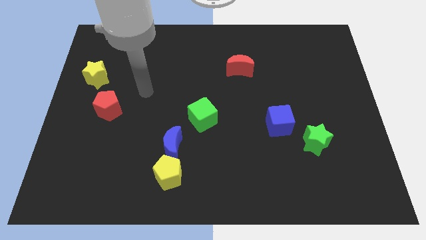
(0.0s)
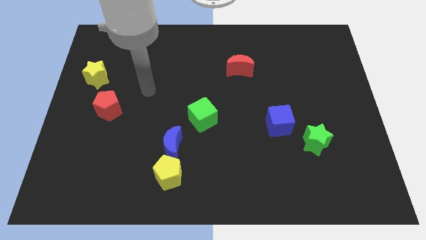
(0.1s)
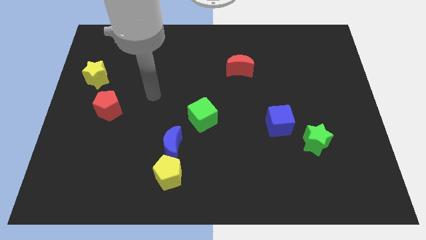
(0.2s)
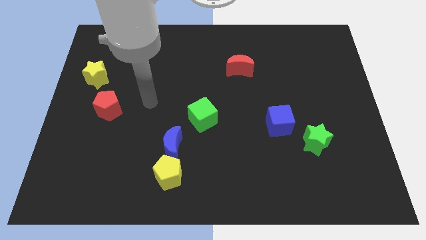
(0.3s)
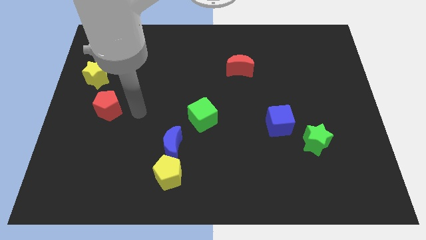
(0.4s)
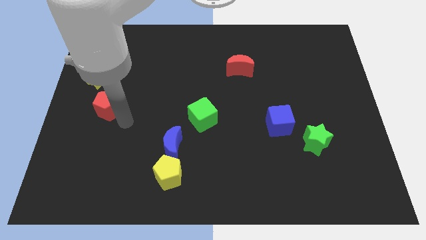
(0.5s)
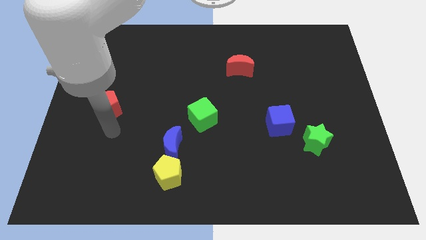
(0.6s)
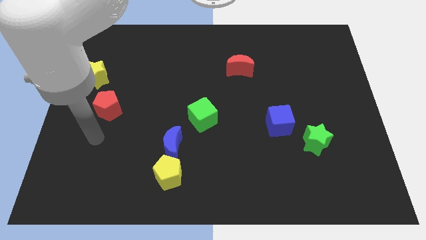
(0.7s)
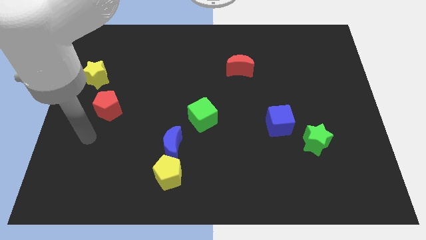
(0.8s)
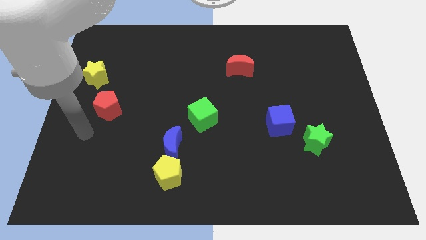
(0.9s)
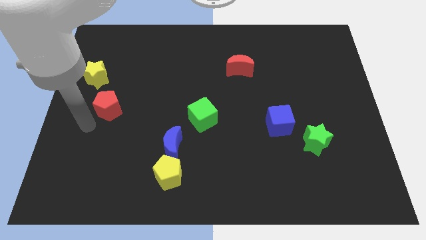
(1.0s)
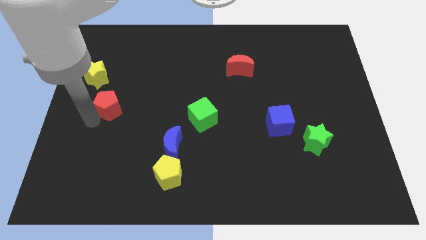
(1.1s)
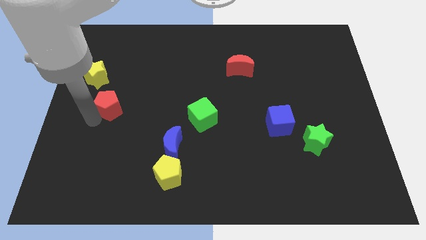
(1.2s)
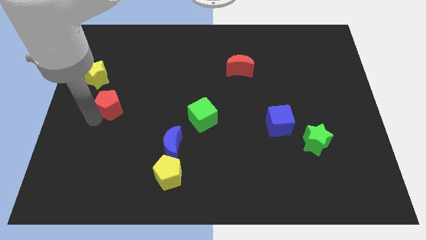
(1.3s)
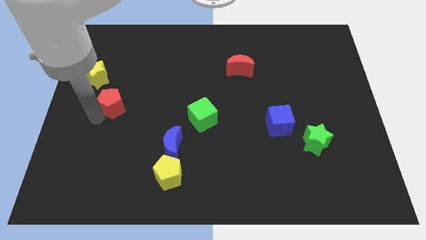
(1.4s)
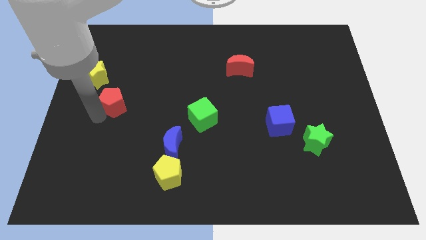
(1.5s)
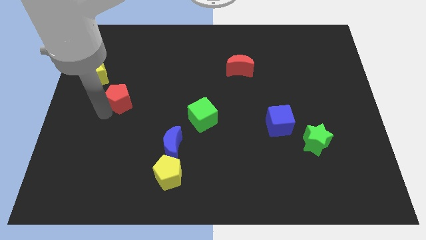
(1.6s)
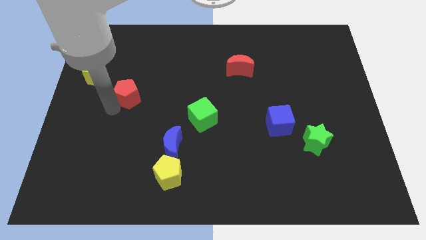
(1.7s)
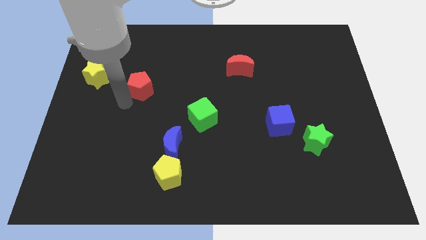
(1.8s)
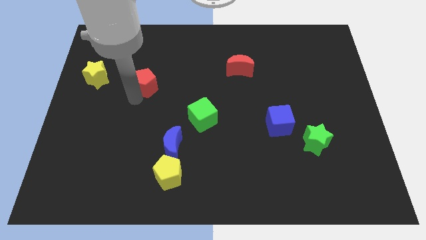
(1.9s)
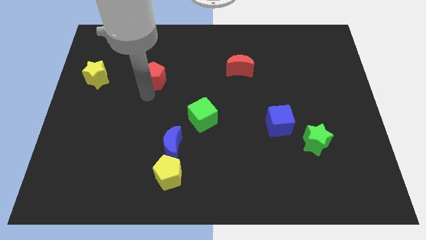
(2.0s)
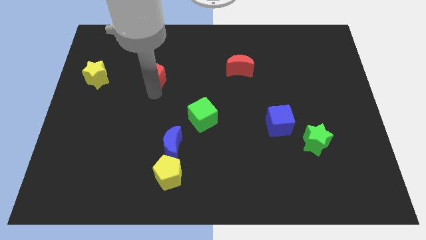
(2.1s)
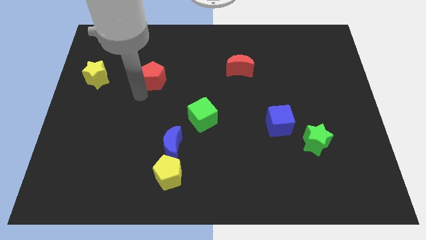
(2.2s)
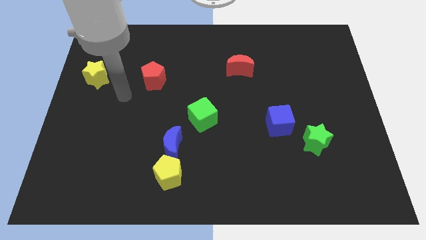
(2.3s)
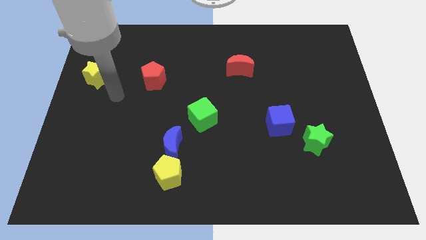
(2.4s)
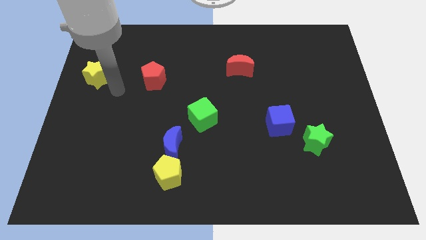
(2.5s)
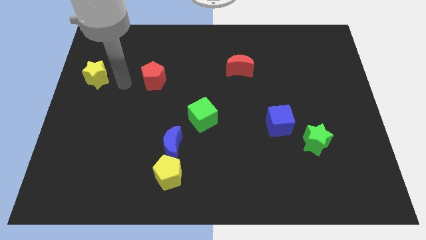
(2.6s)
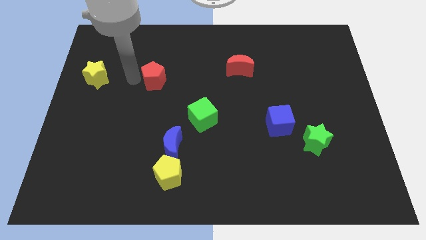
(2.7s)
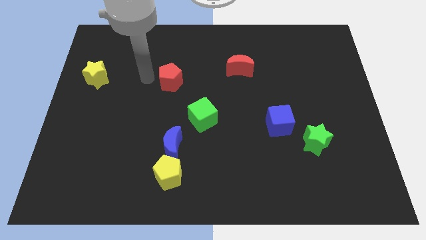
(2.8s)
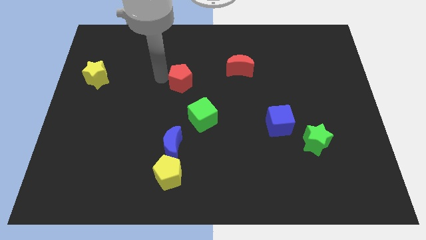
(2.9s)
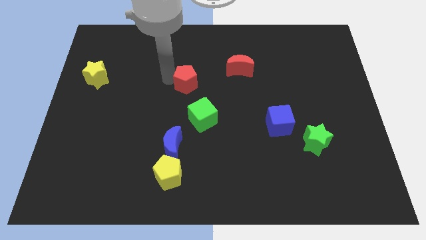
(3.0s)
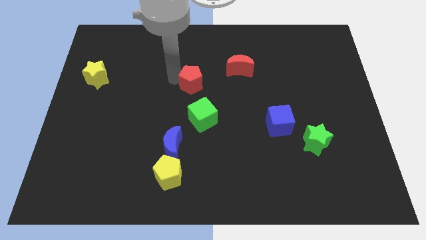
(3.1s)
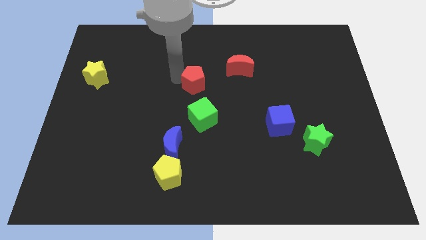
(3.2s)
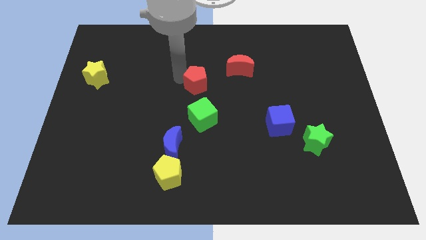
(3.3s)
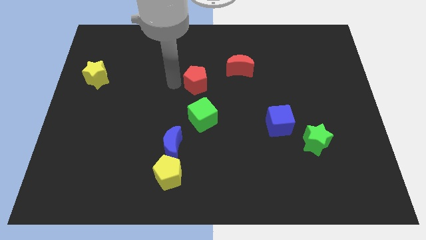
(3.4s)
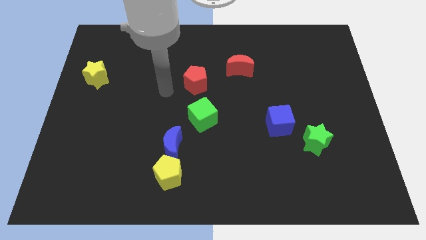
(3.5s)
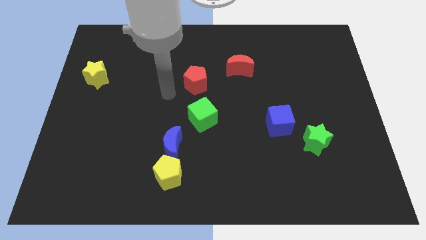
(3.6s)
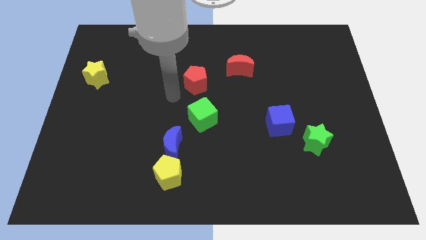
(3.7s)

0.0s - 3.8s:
move the red pentagon above the green cube

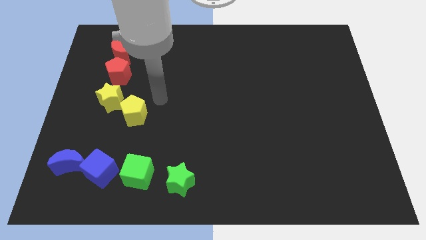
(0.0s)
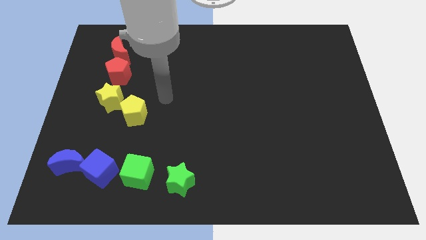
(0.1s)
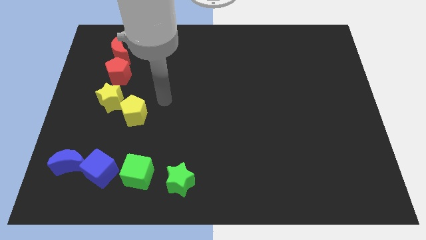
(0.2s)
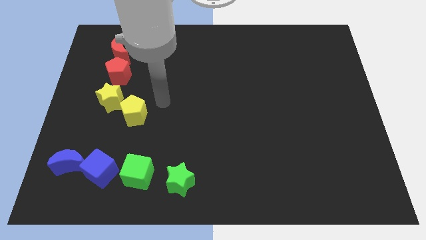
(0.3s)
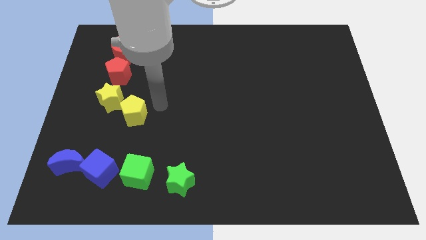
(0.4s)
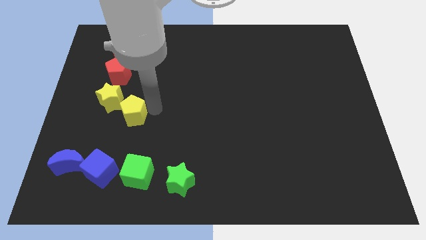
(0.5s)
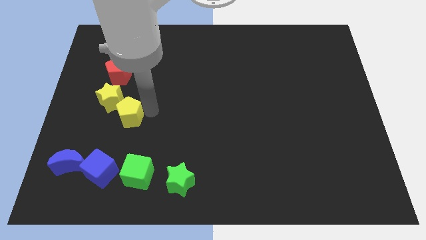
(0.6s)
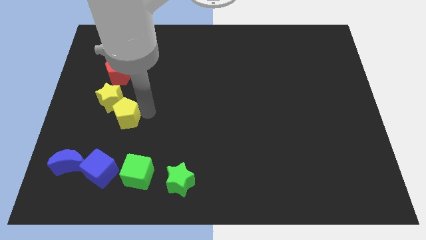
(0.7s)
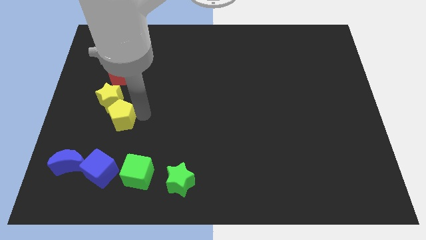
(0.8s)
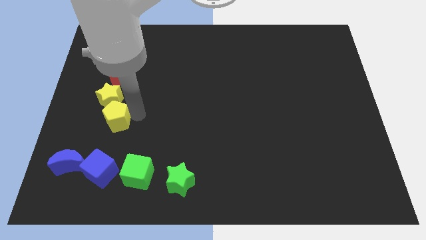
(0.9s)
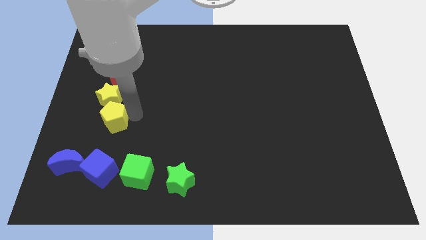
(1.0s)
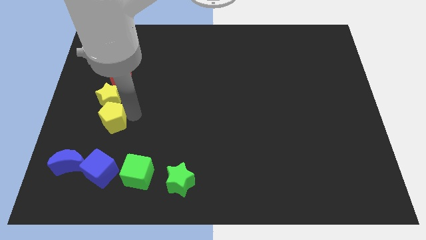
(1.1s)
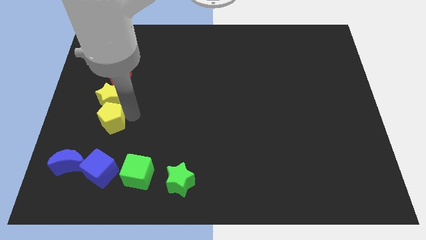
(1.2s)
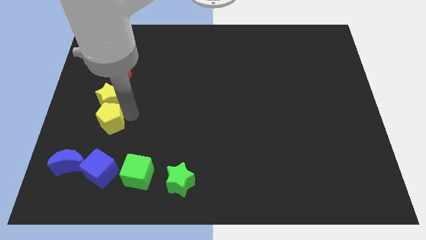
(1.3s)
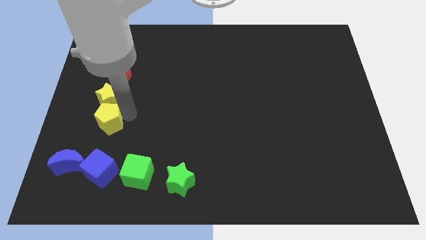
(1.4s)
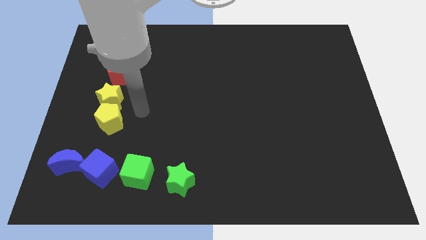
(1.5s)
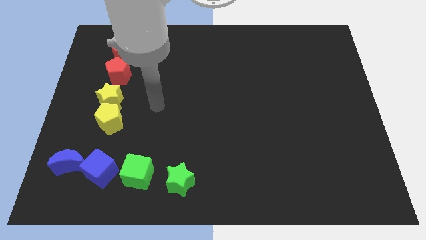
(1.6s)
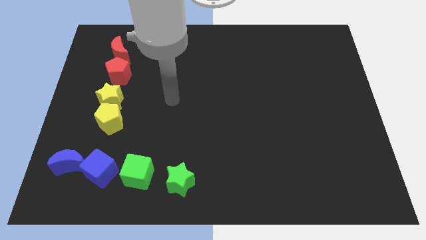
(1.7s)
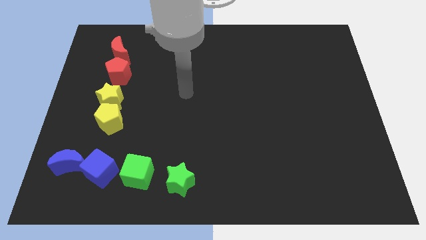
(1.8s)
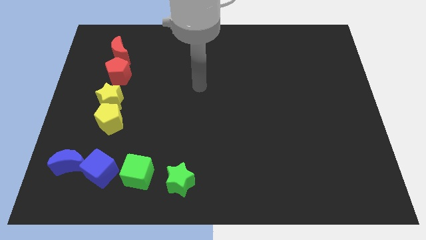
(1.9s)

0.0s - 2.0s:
drag the yellow pentagon and place it below the yellow star

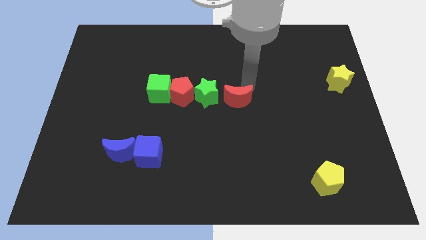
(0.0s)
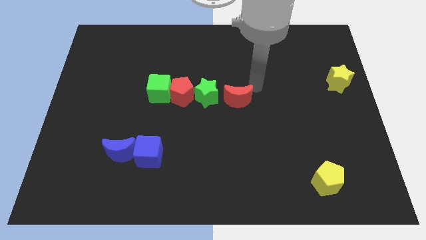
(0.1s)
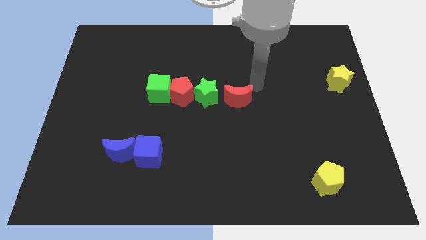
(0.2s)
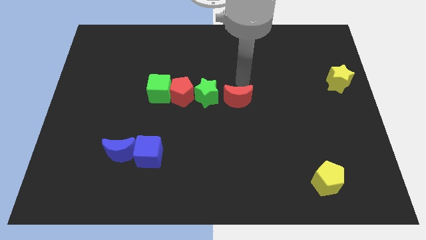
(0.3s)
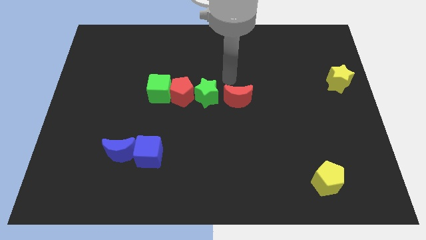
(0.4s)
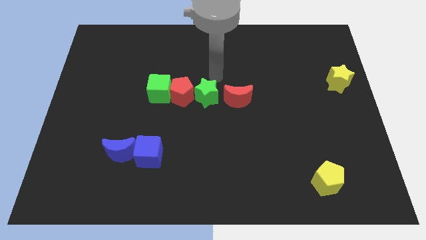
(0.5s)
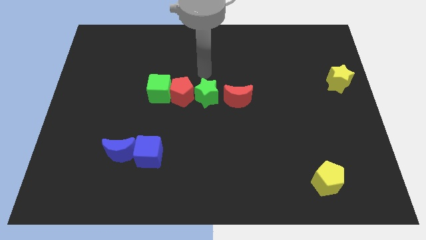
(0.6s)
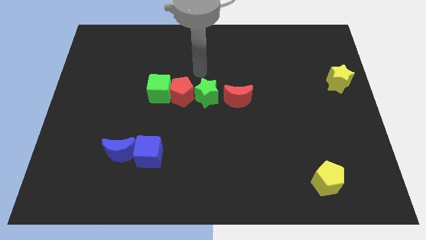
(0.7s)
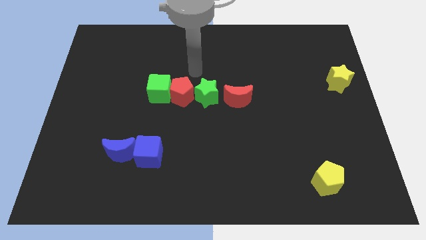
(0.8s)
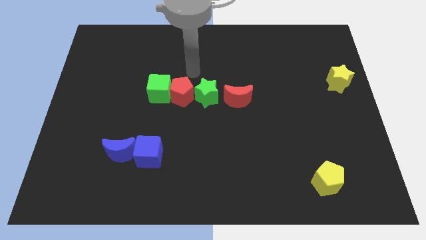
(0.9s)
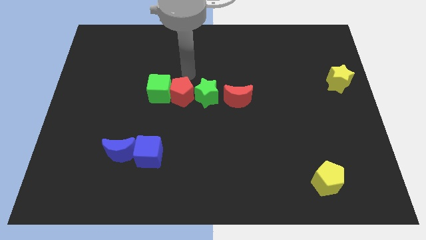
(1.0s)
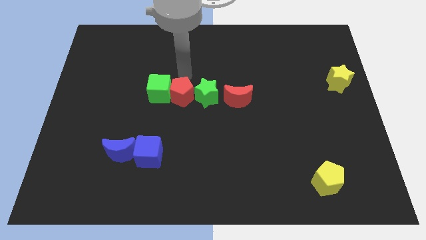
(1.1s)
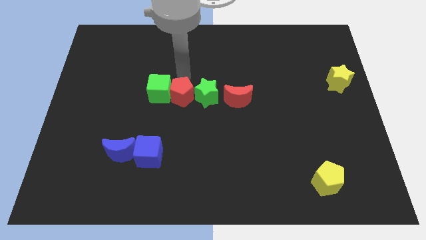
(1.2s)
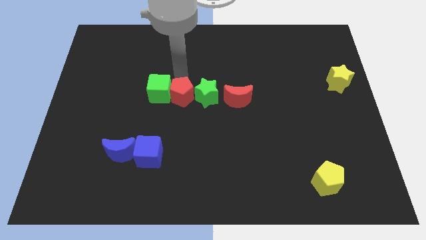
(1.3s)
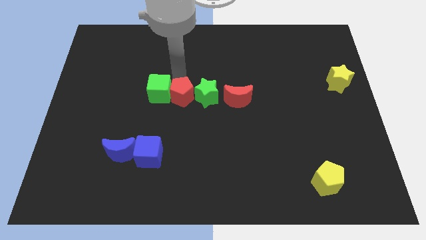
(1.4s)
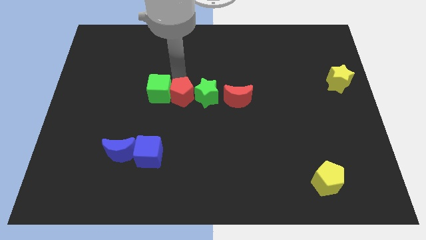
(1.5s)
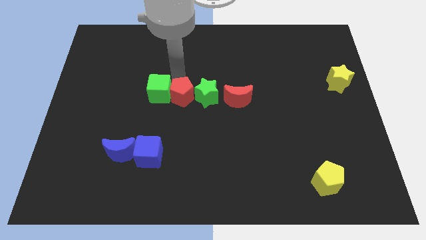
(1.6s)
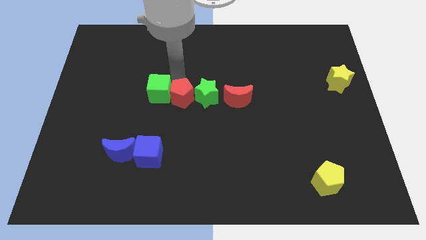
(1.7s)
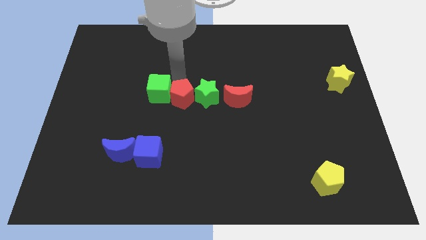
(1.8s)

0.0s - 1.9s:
place your arm on the top side of the red pentagon

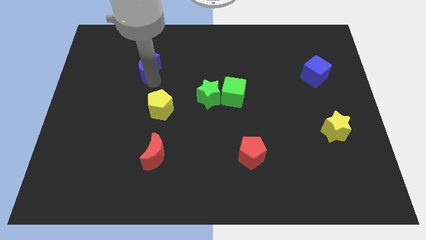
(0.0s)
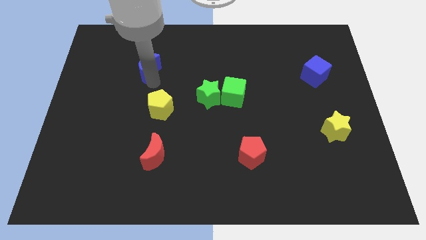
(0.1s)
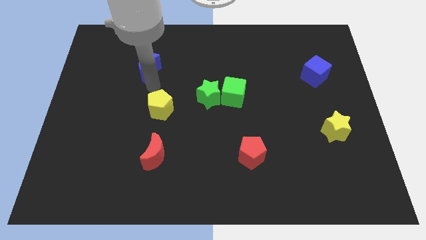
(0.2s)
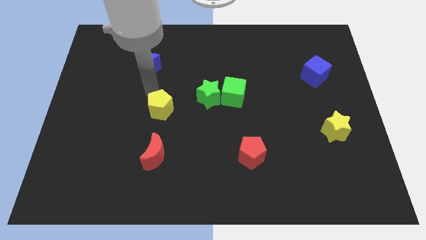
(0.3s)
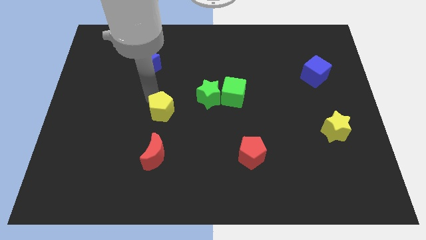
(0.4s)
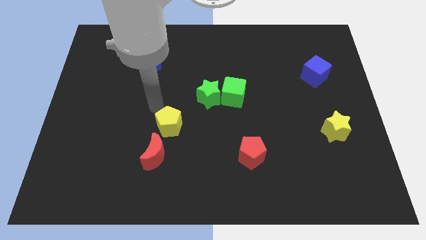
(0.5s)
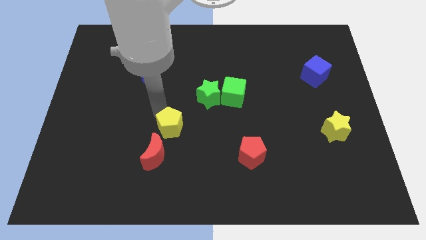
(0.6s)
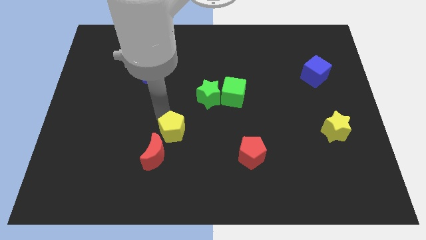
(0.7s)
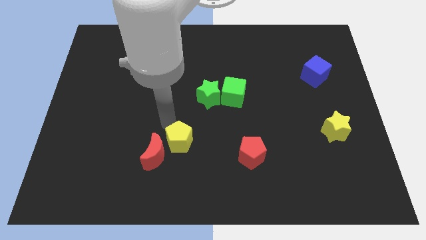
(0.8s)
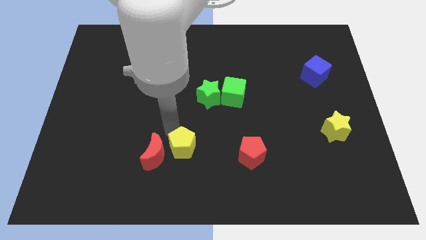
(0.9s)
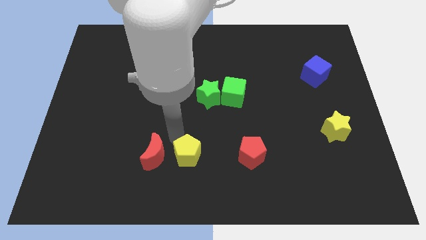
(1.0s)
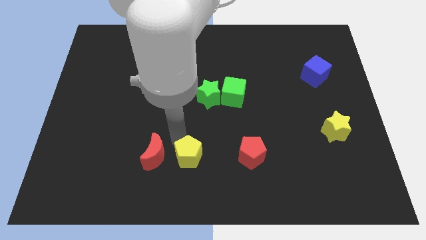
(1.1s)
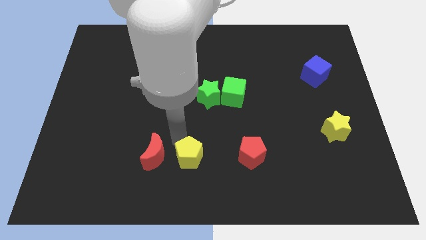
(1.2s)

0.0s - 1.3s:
put the yellow pentagon to the right of the red moon
